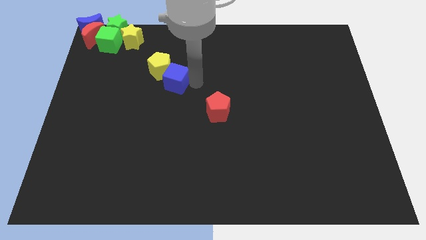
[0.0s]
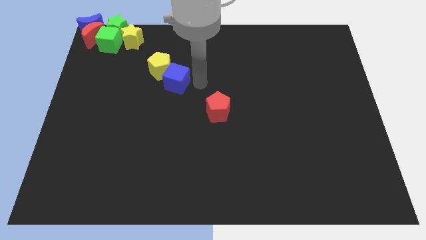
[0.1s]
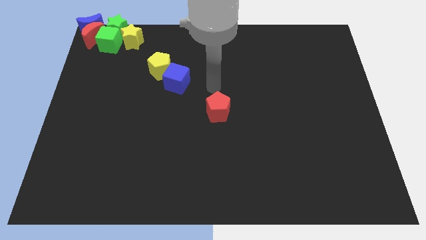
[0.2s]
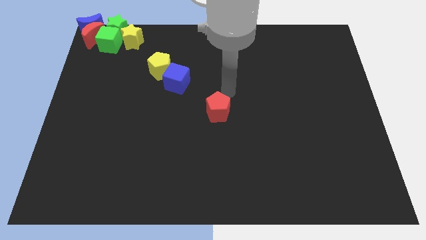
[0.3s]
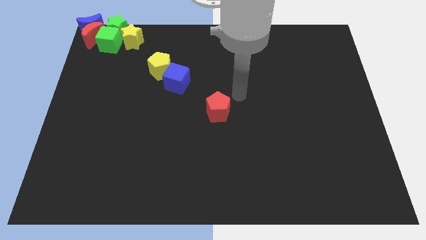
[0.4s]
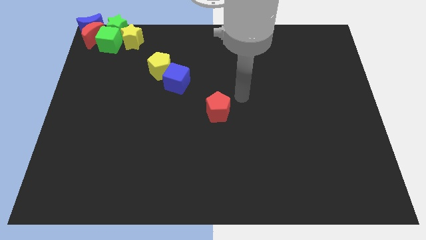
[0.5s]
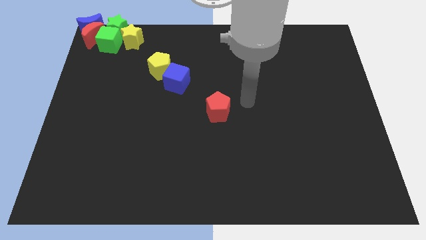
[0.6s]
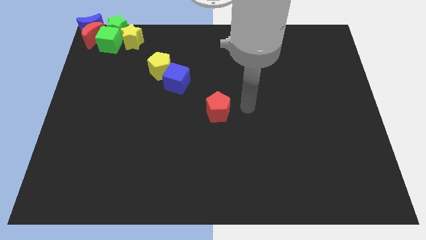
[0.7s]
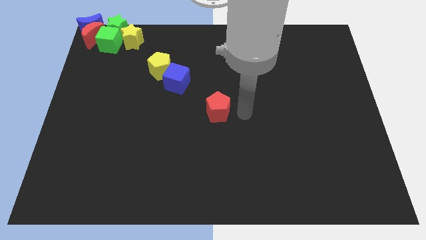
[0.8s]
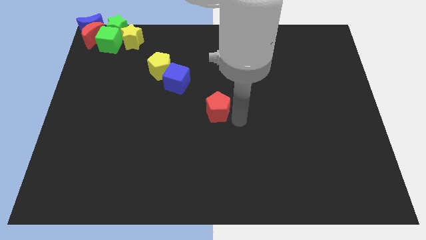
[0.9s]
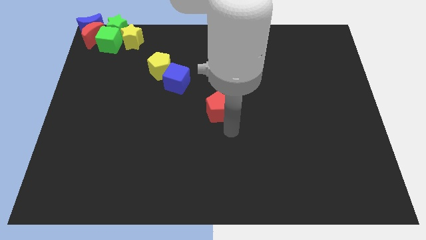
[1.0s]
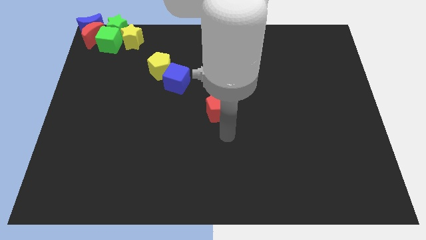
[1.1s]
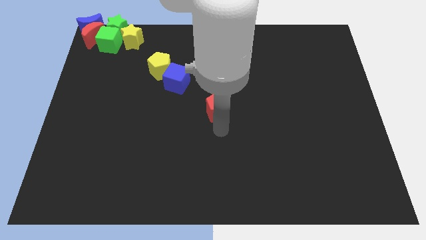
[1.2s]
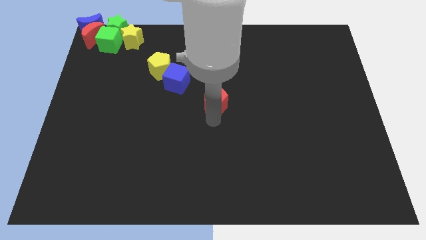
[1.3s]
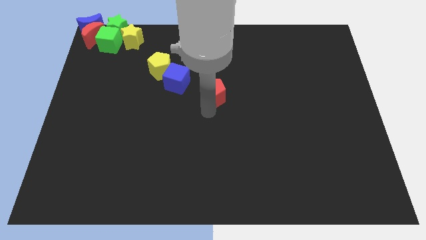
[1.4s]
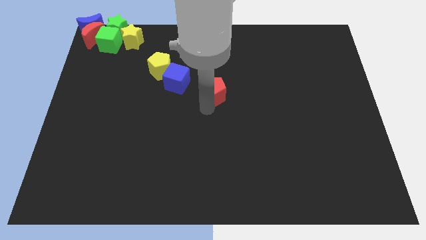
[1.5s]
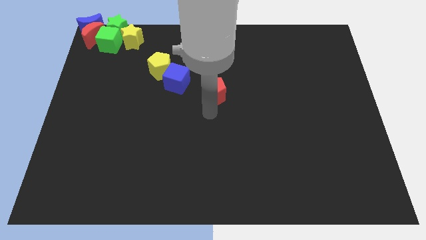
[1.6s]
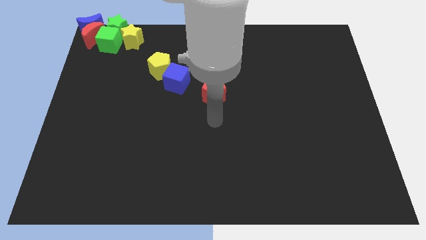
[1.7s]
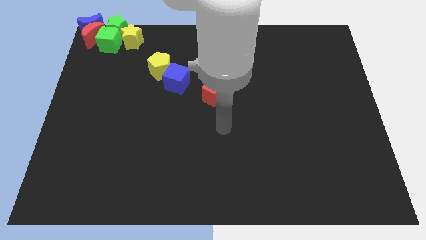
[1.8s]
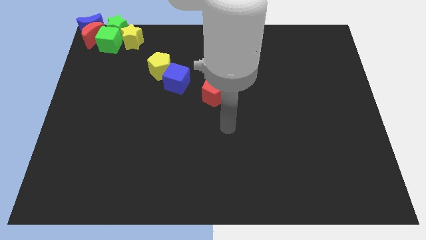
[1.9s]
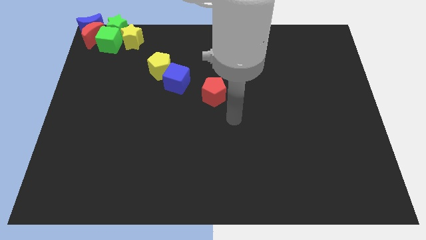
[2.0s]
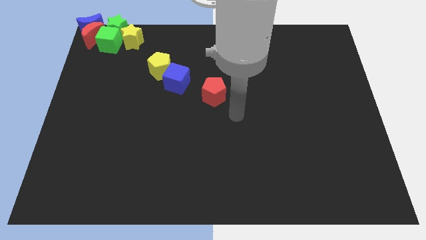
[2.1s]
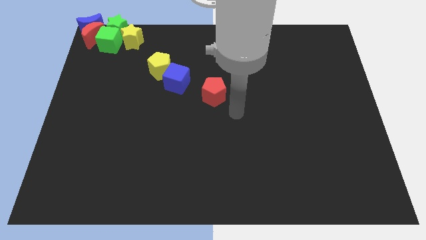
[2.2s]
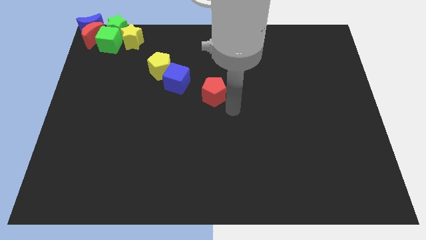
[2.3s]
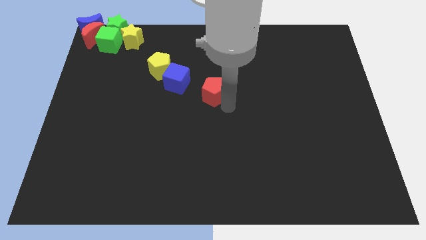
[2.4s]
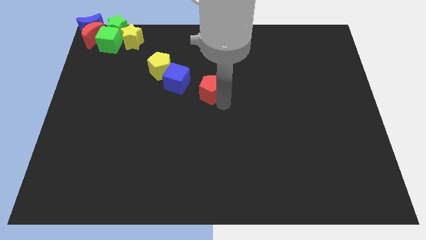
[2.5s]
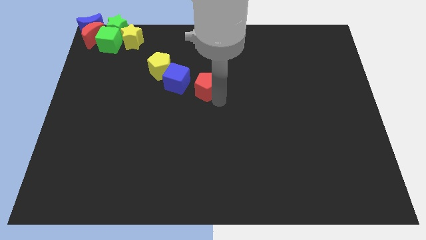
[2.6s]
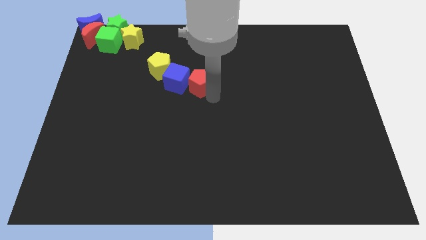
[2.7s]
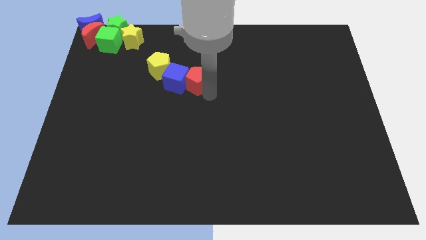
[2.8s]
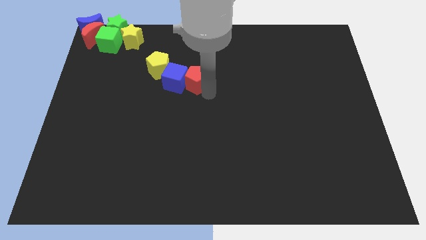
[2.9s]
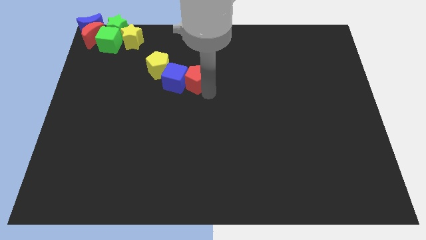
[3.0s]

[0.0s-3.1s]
push the red pentagon into the right side of the blue cube

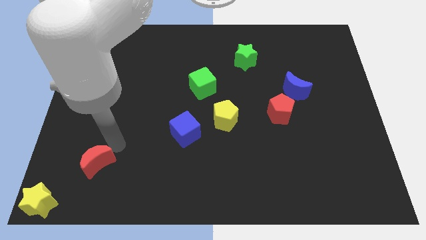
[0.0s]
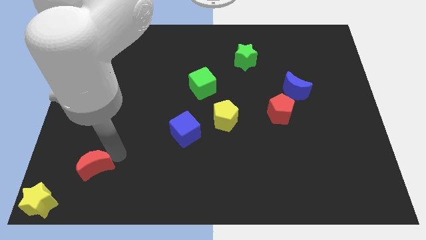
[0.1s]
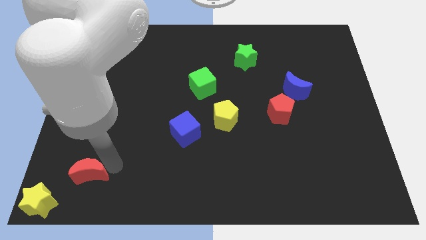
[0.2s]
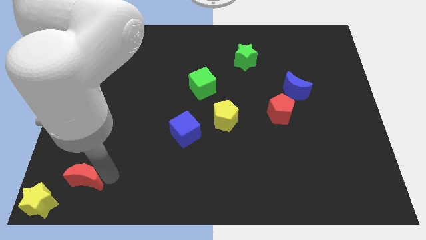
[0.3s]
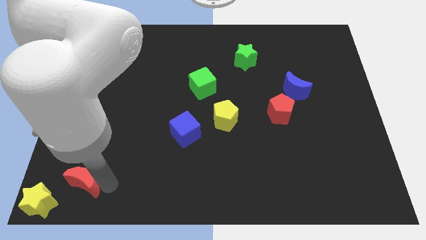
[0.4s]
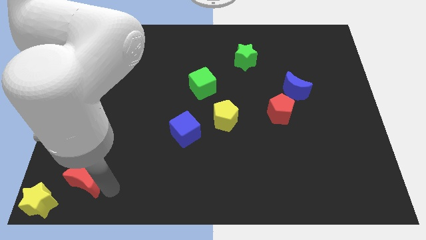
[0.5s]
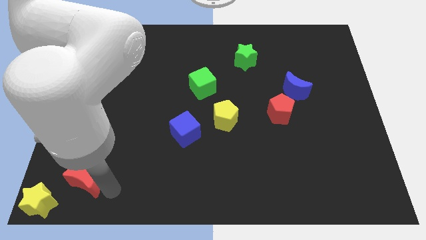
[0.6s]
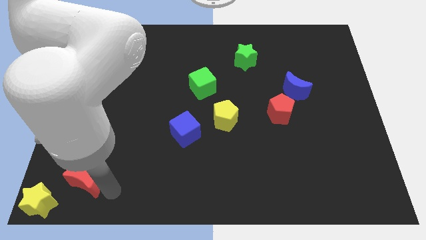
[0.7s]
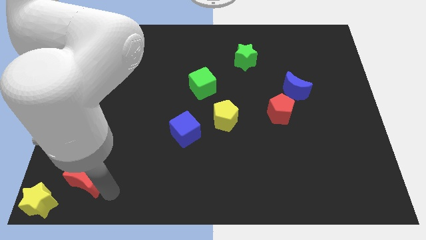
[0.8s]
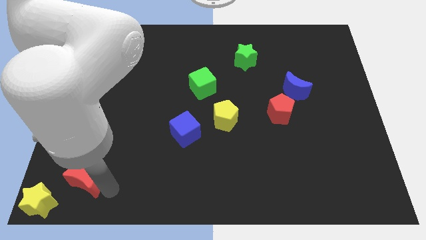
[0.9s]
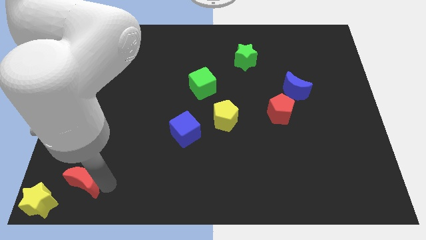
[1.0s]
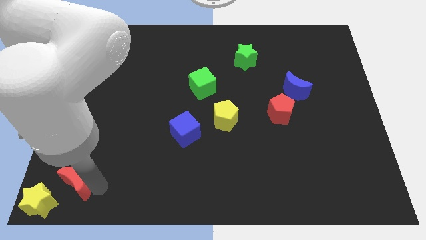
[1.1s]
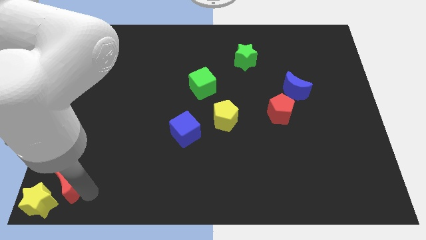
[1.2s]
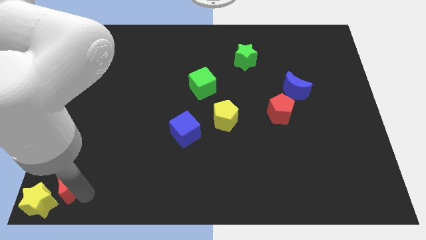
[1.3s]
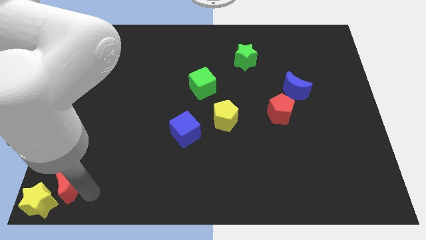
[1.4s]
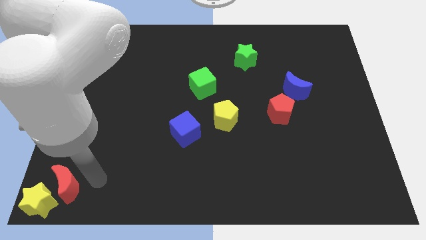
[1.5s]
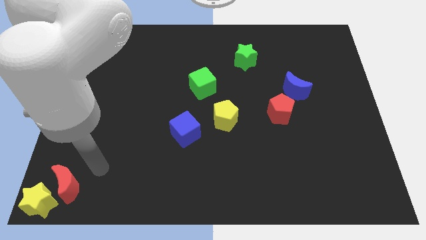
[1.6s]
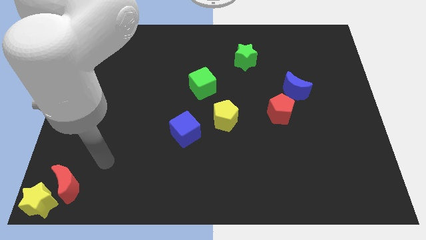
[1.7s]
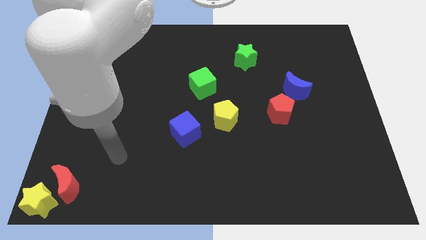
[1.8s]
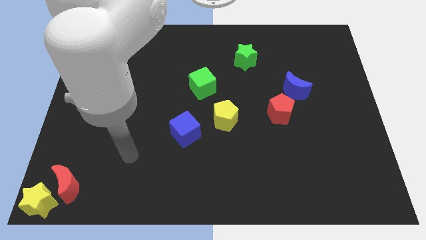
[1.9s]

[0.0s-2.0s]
move the red moon close to the yellow star

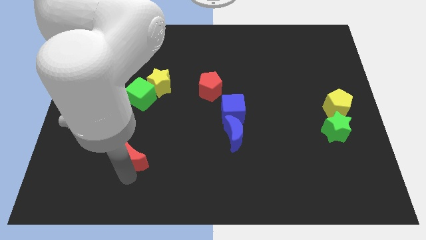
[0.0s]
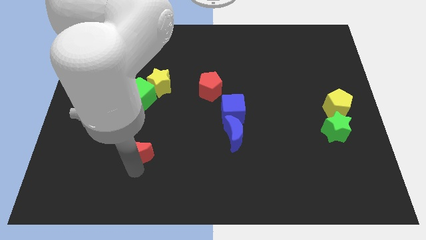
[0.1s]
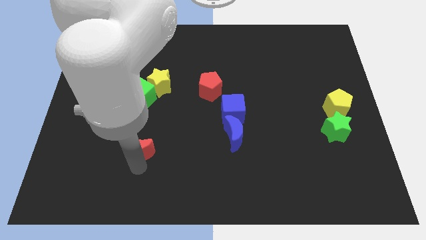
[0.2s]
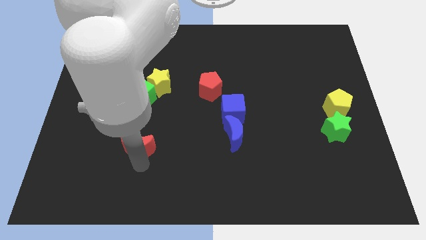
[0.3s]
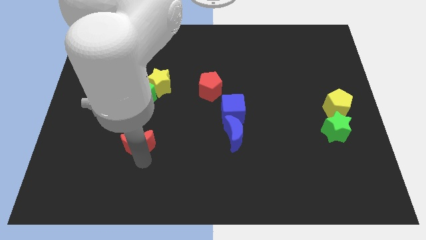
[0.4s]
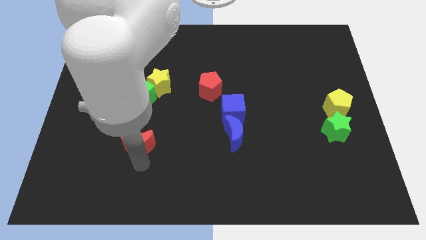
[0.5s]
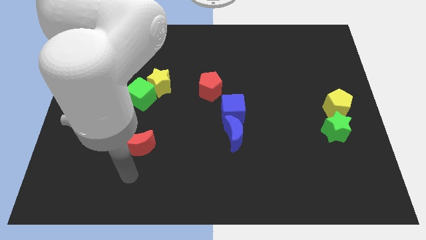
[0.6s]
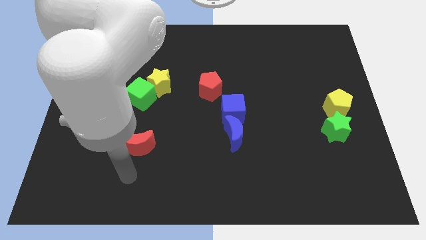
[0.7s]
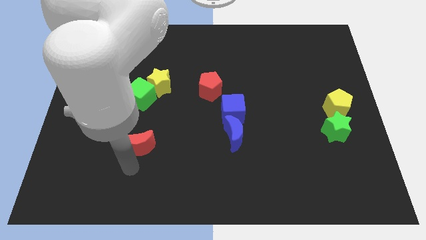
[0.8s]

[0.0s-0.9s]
move the red crescent slightly upwards

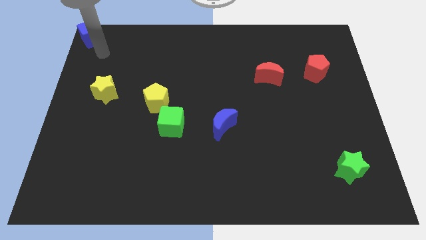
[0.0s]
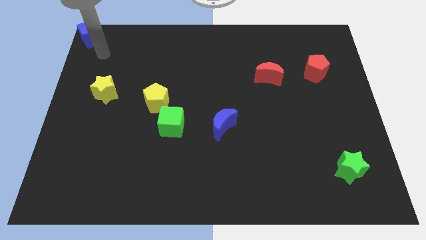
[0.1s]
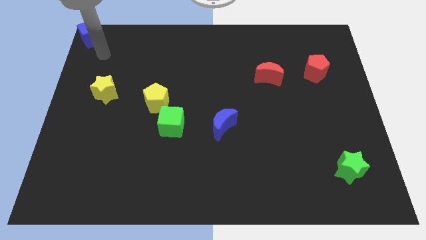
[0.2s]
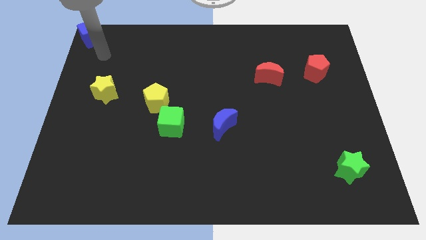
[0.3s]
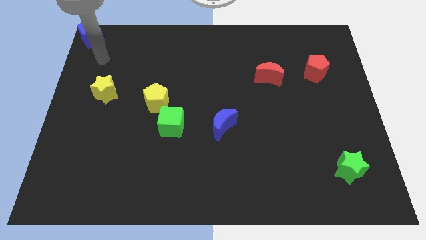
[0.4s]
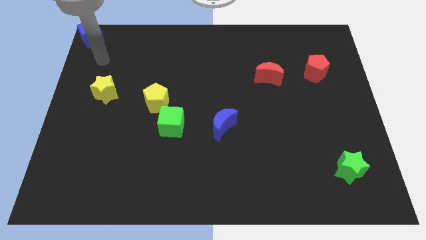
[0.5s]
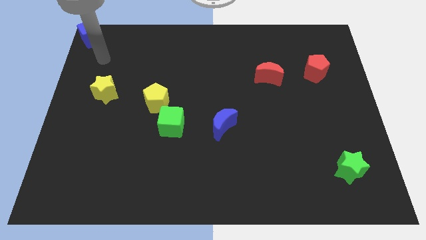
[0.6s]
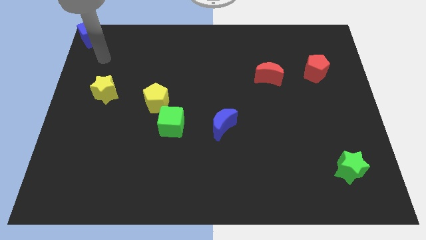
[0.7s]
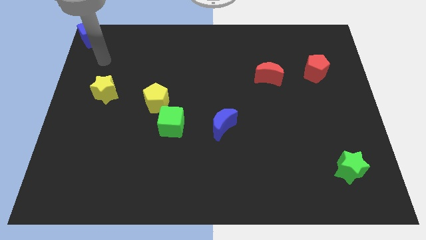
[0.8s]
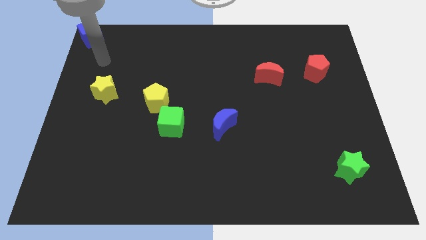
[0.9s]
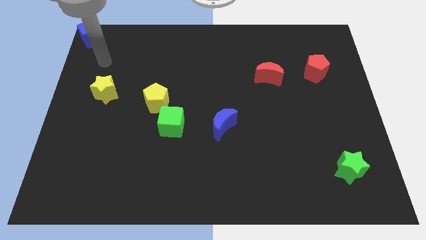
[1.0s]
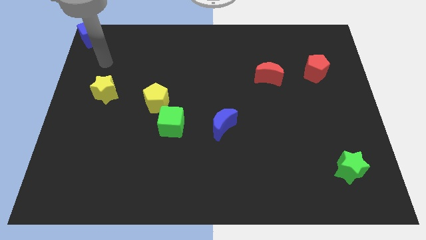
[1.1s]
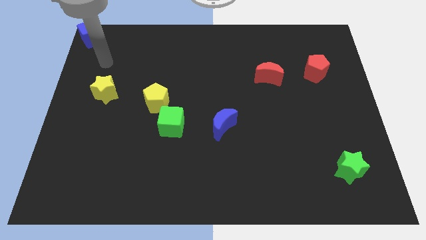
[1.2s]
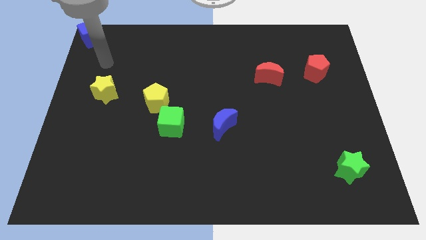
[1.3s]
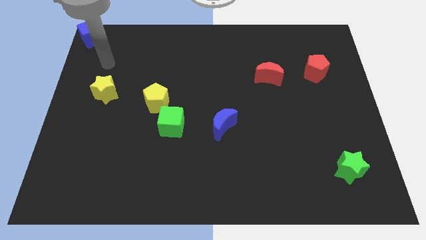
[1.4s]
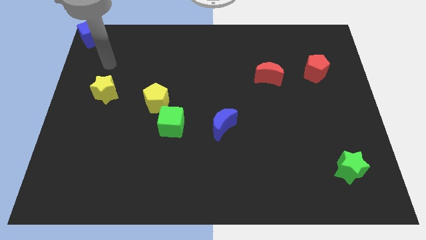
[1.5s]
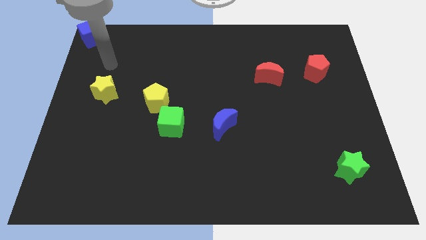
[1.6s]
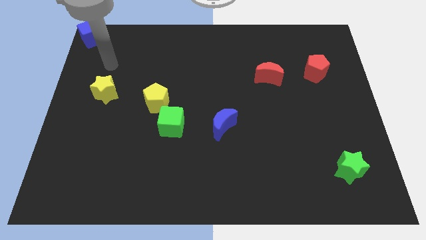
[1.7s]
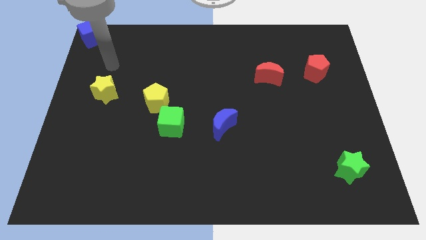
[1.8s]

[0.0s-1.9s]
move your arm away from the blue cube

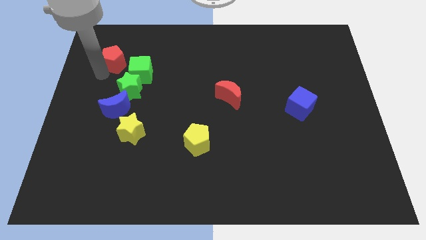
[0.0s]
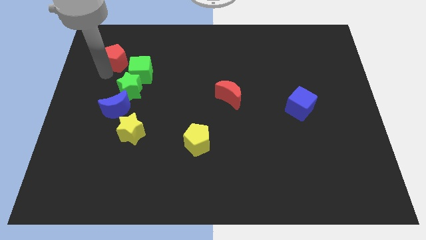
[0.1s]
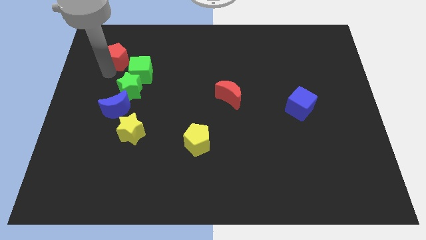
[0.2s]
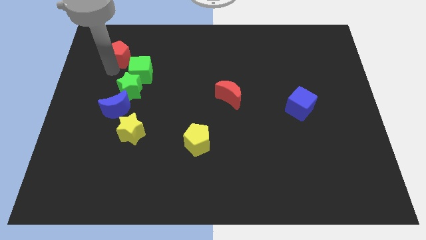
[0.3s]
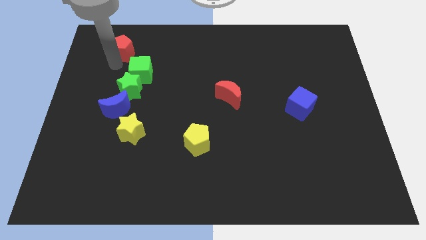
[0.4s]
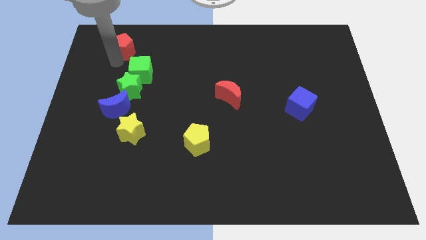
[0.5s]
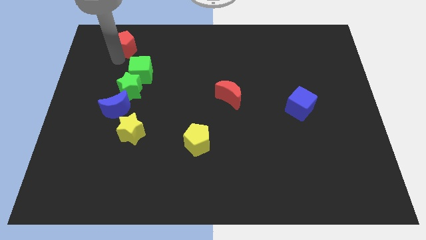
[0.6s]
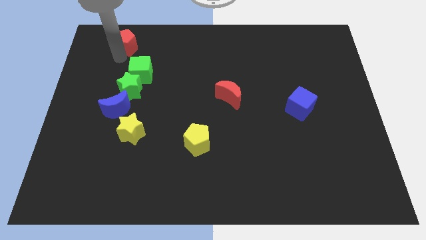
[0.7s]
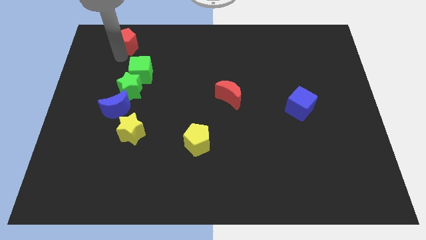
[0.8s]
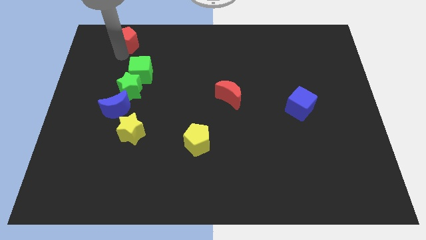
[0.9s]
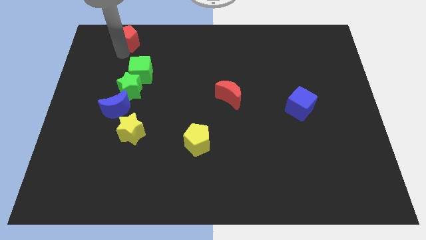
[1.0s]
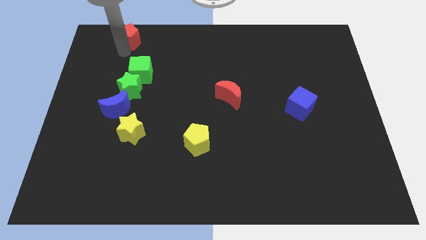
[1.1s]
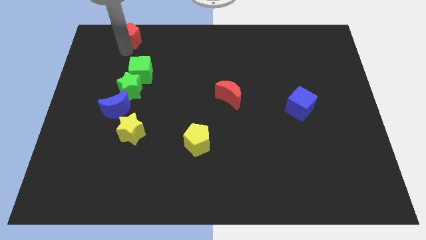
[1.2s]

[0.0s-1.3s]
move the red pentagon to the top left
